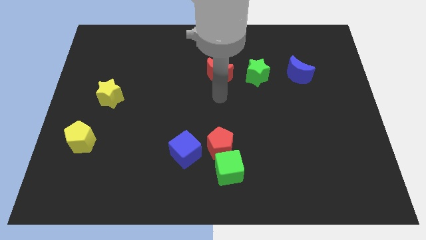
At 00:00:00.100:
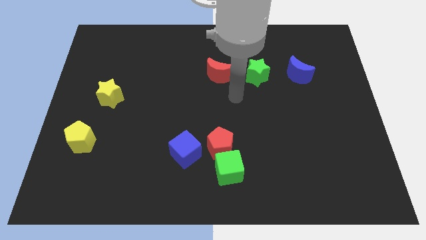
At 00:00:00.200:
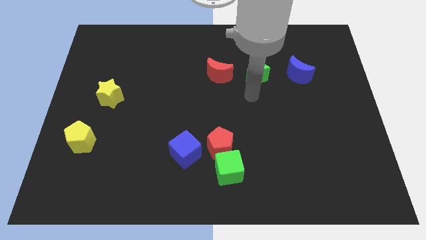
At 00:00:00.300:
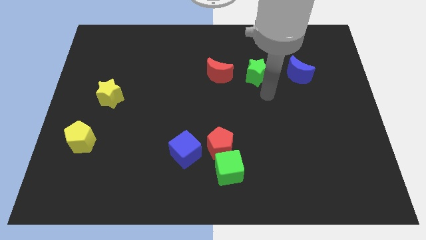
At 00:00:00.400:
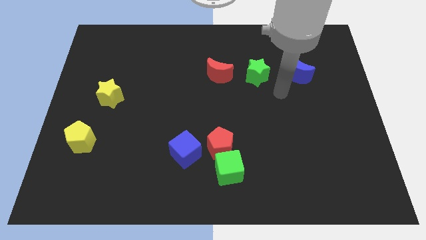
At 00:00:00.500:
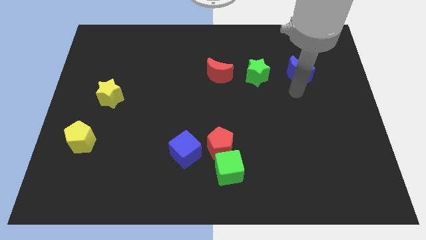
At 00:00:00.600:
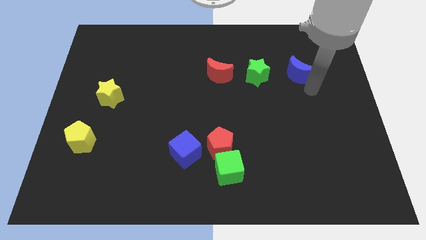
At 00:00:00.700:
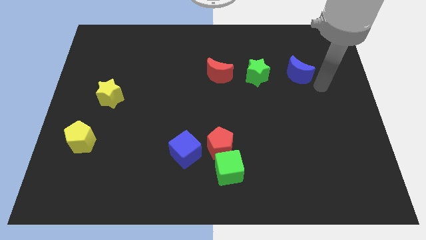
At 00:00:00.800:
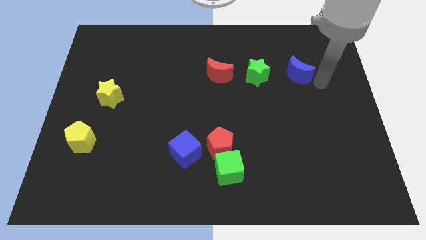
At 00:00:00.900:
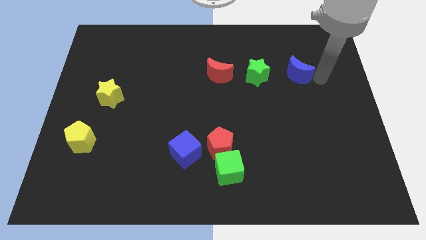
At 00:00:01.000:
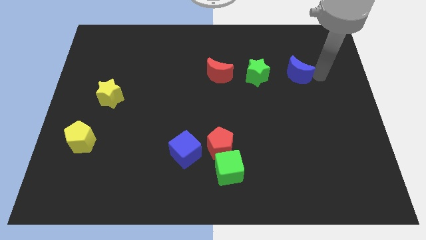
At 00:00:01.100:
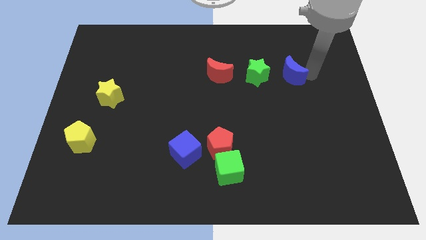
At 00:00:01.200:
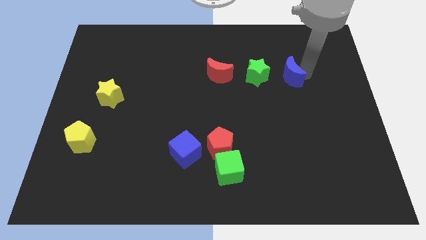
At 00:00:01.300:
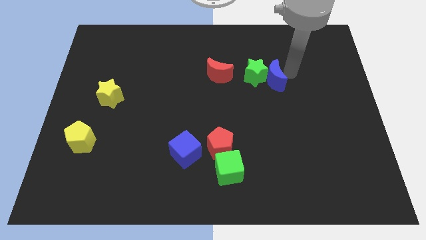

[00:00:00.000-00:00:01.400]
move the blue crescent into the right side of the green star

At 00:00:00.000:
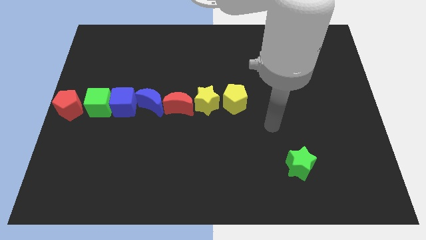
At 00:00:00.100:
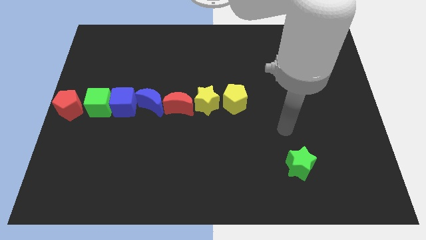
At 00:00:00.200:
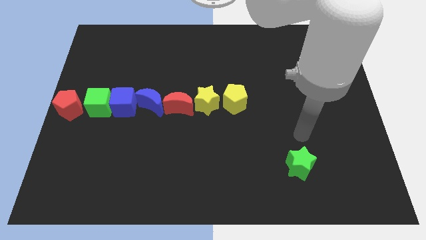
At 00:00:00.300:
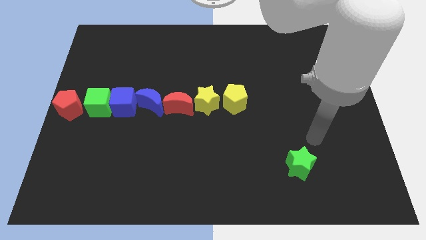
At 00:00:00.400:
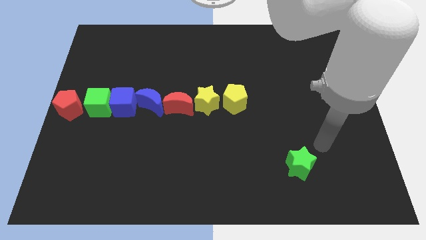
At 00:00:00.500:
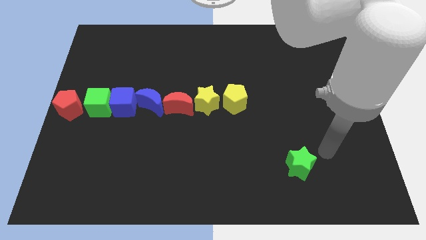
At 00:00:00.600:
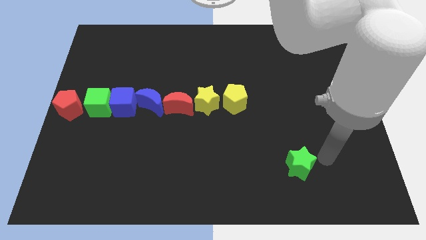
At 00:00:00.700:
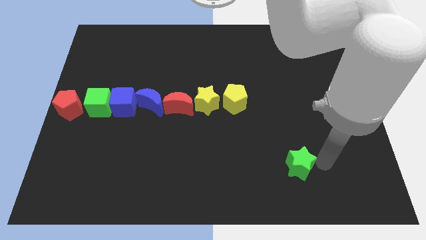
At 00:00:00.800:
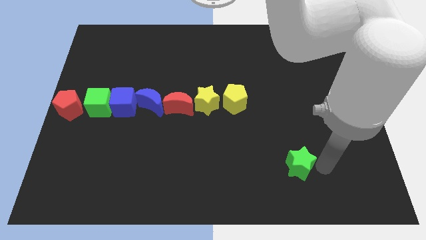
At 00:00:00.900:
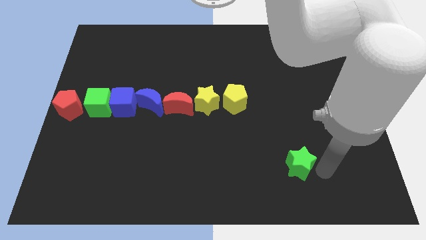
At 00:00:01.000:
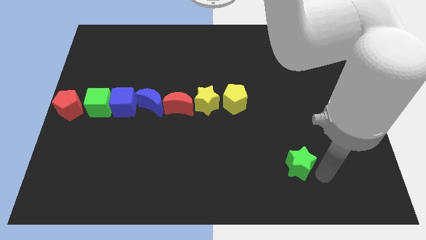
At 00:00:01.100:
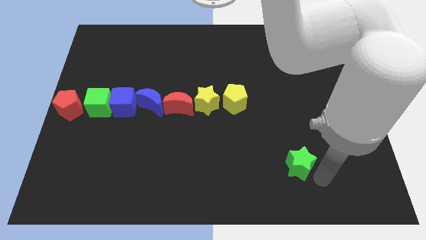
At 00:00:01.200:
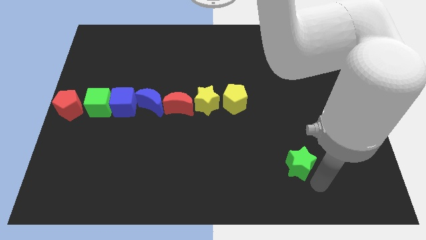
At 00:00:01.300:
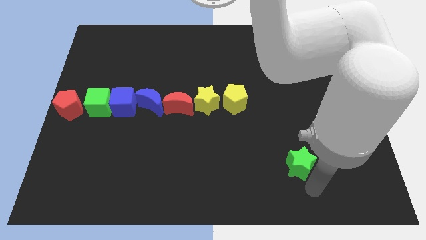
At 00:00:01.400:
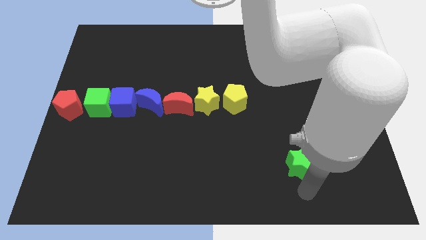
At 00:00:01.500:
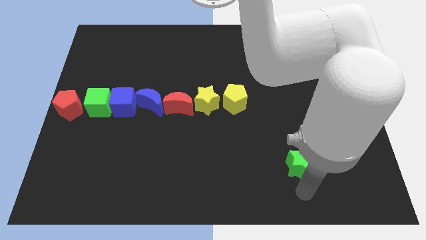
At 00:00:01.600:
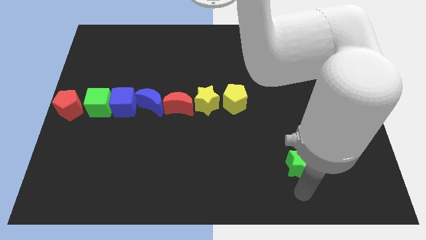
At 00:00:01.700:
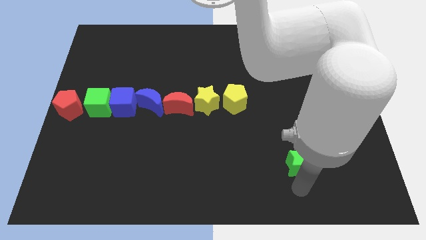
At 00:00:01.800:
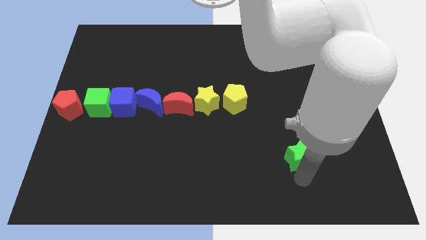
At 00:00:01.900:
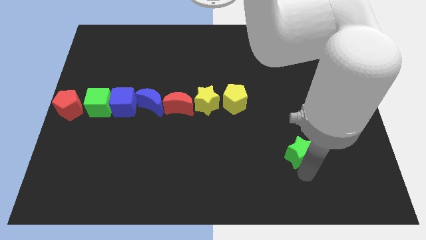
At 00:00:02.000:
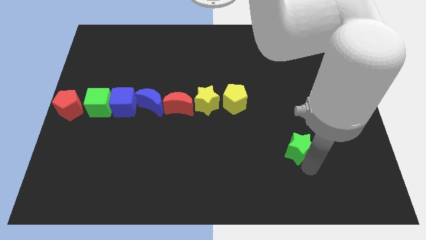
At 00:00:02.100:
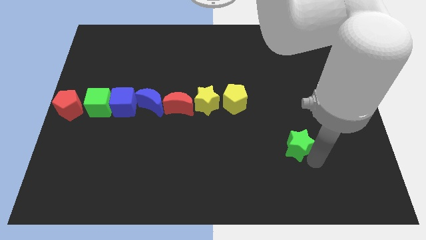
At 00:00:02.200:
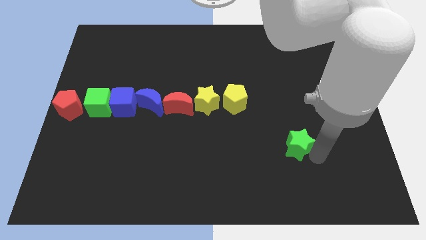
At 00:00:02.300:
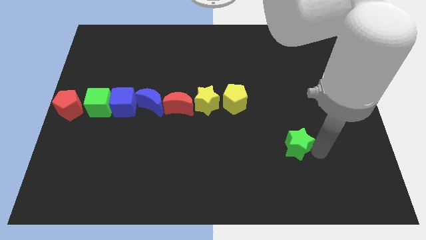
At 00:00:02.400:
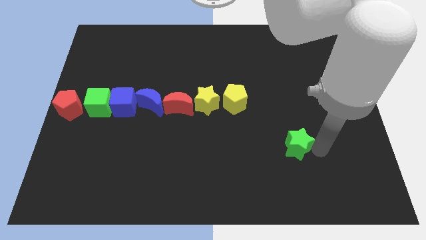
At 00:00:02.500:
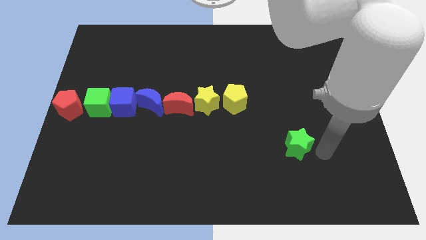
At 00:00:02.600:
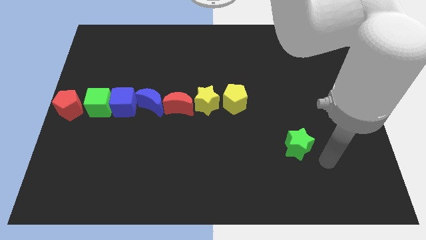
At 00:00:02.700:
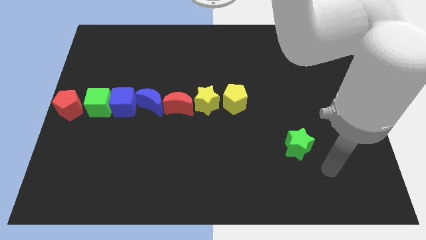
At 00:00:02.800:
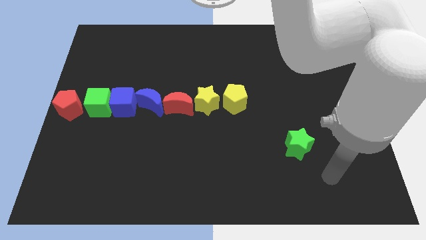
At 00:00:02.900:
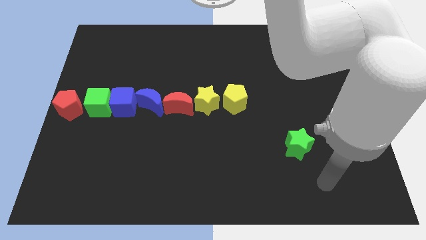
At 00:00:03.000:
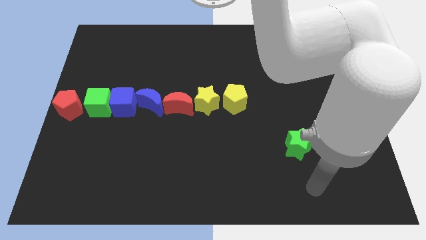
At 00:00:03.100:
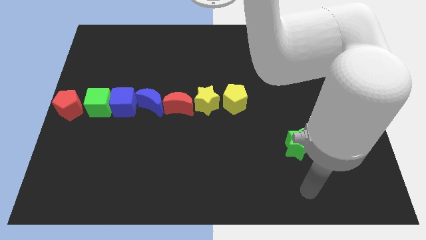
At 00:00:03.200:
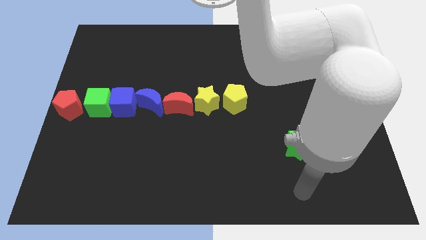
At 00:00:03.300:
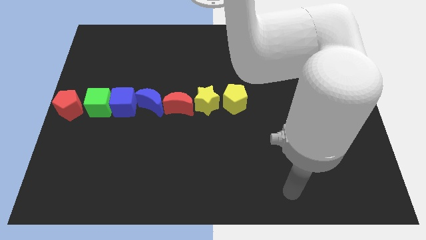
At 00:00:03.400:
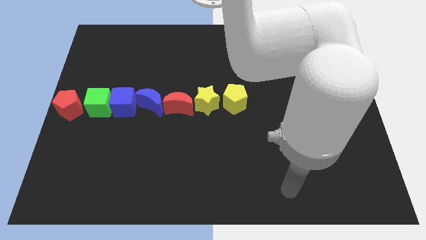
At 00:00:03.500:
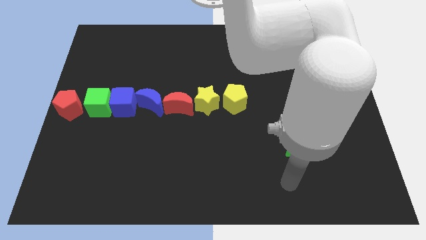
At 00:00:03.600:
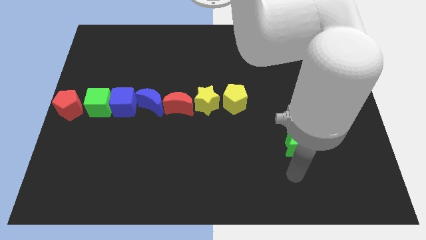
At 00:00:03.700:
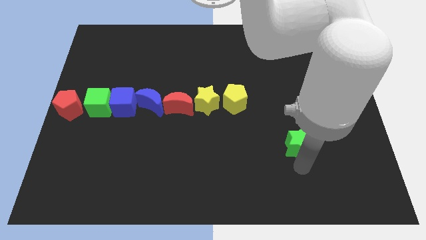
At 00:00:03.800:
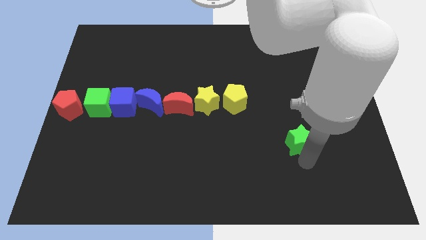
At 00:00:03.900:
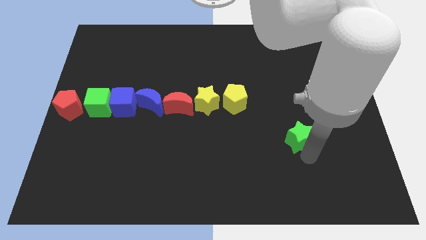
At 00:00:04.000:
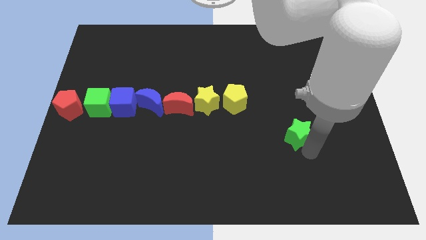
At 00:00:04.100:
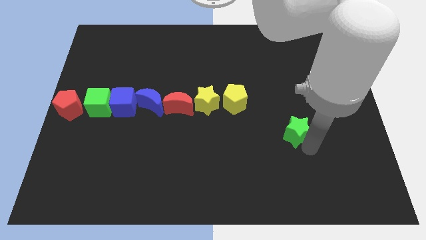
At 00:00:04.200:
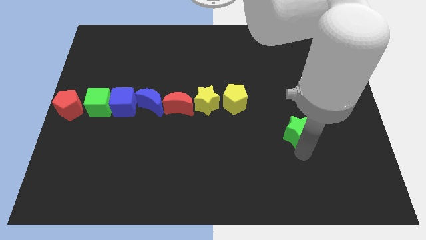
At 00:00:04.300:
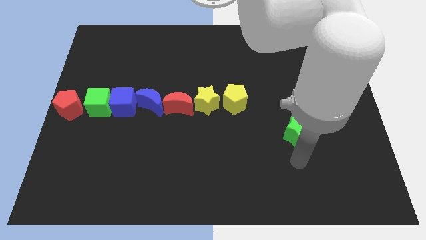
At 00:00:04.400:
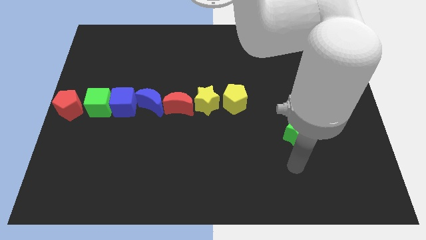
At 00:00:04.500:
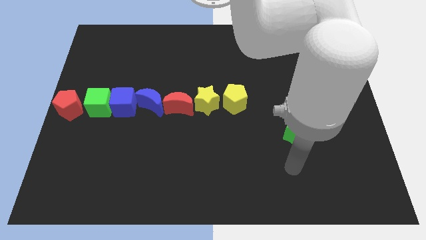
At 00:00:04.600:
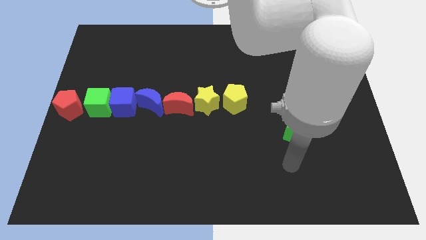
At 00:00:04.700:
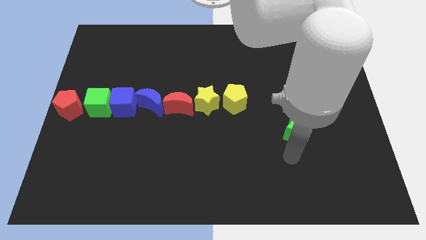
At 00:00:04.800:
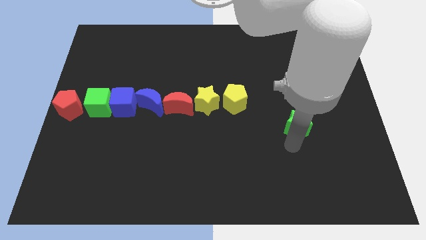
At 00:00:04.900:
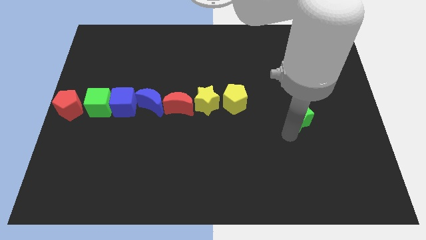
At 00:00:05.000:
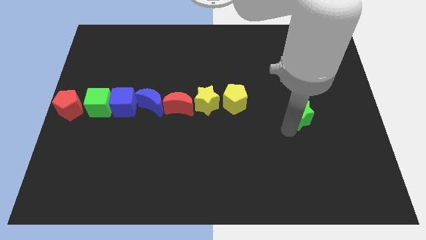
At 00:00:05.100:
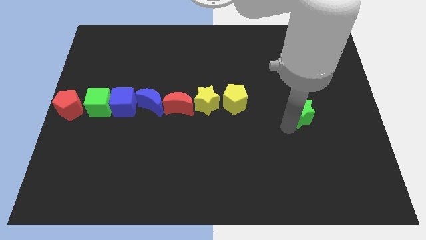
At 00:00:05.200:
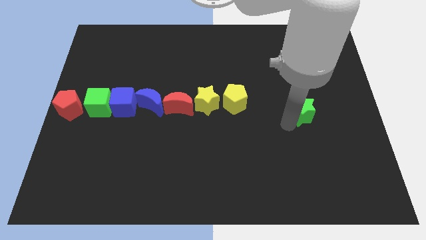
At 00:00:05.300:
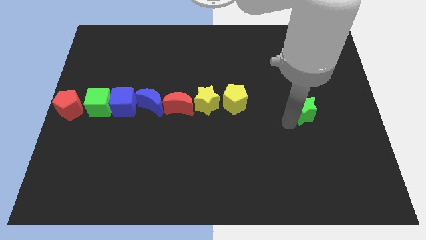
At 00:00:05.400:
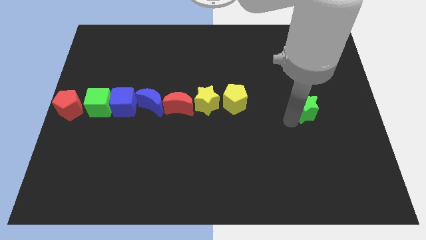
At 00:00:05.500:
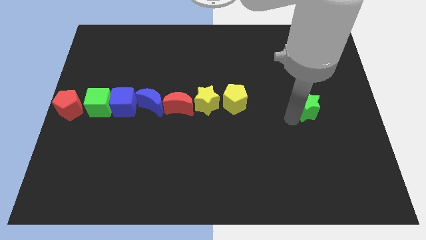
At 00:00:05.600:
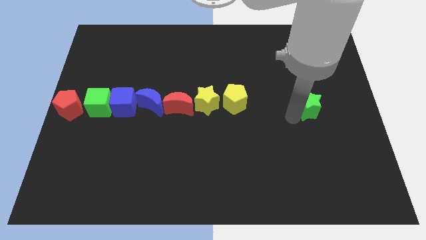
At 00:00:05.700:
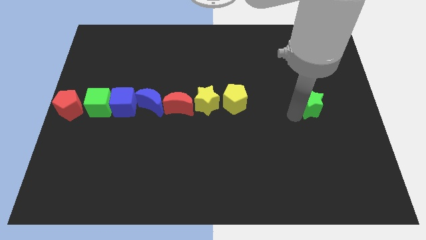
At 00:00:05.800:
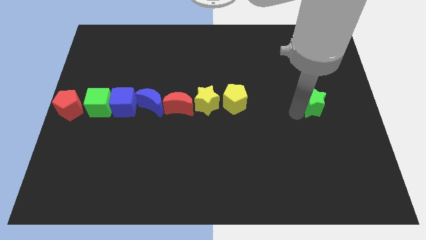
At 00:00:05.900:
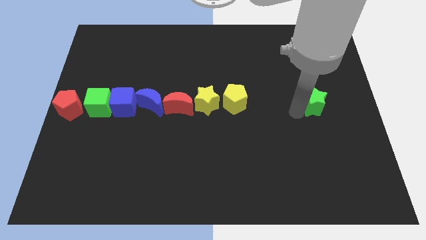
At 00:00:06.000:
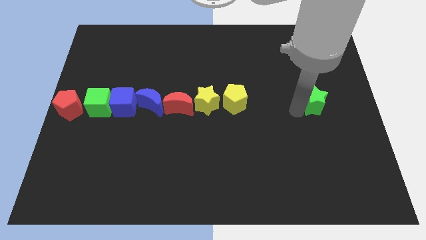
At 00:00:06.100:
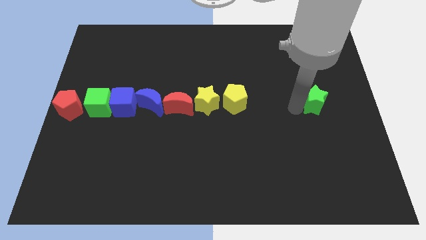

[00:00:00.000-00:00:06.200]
push the green star to the top of the board

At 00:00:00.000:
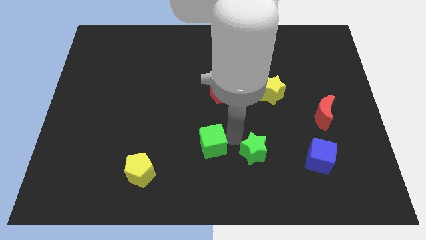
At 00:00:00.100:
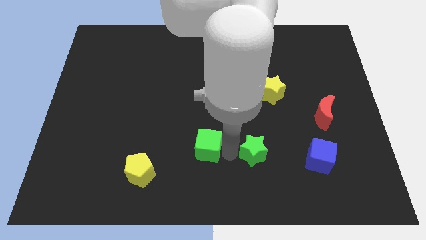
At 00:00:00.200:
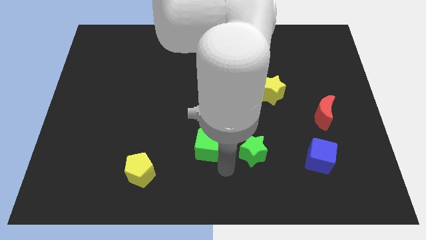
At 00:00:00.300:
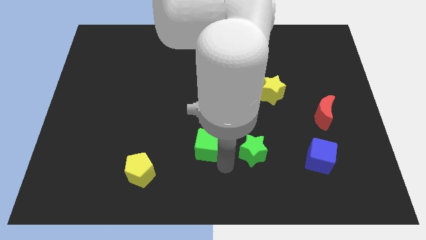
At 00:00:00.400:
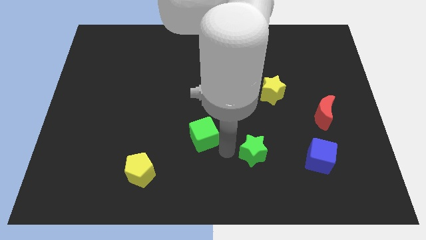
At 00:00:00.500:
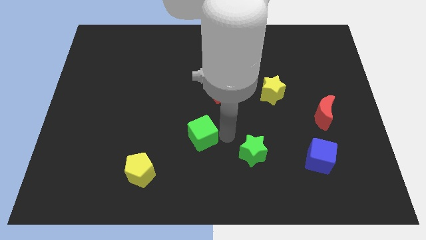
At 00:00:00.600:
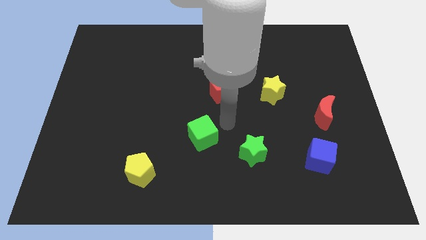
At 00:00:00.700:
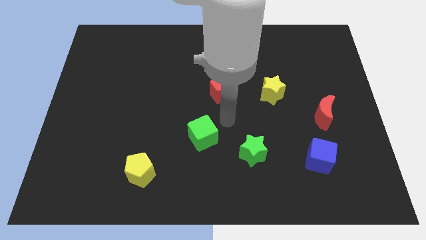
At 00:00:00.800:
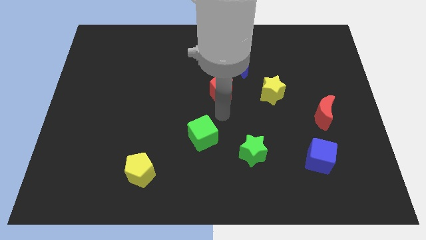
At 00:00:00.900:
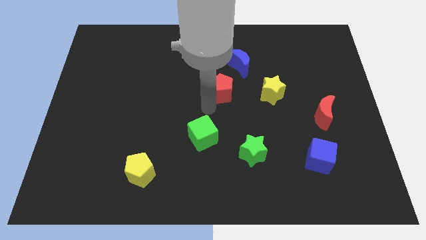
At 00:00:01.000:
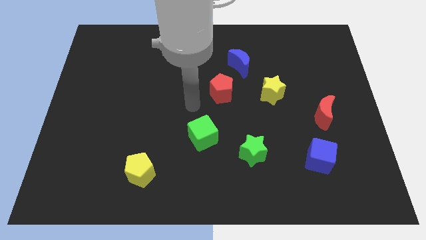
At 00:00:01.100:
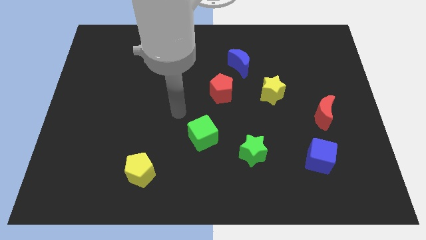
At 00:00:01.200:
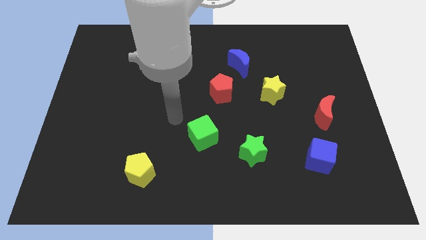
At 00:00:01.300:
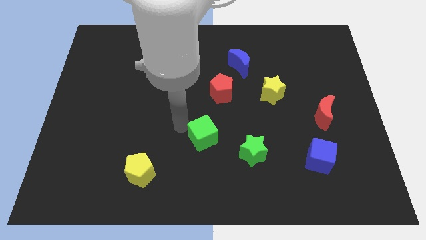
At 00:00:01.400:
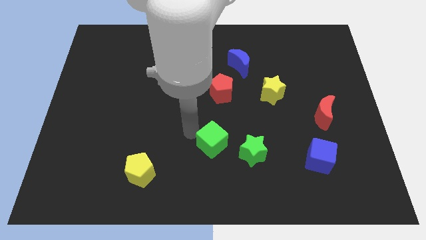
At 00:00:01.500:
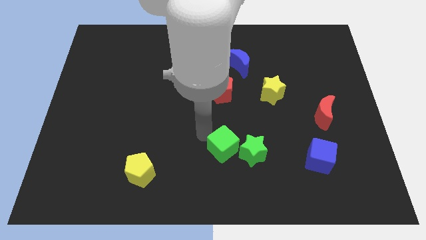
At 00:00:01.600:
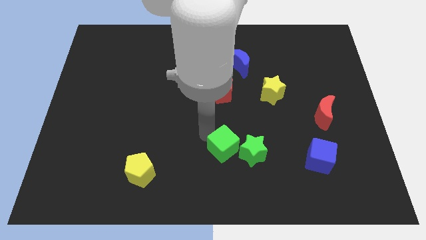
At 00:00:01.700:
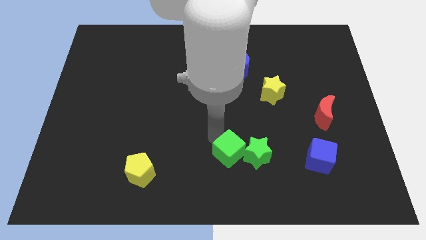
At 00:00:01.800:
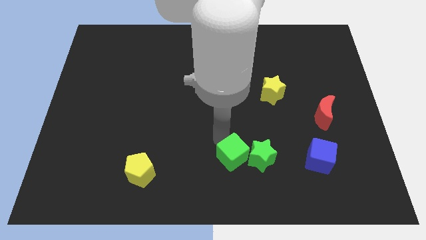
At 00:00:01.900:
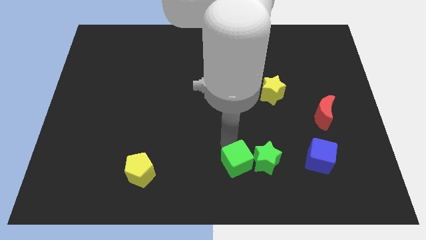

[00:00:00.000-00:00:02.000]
slightly push the green cube towards green star
